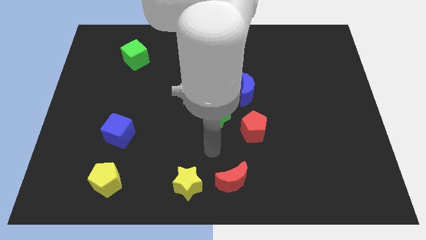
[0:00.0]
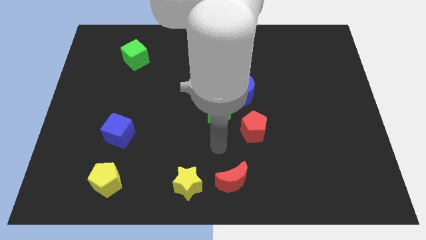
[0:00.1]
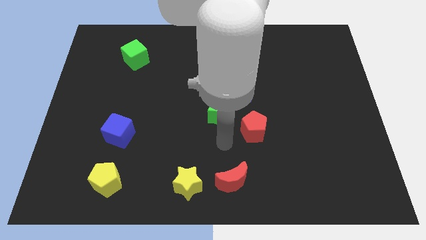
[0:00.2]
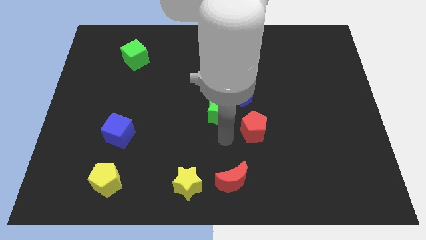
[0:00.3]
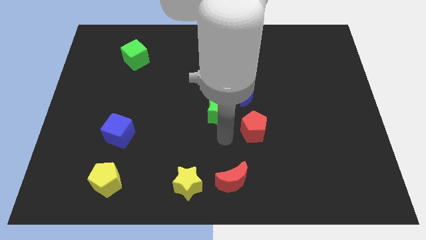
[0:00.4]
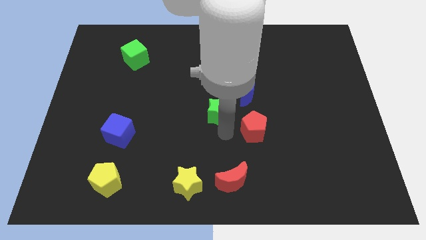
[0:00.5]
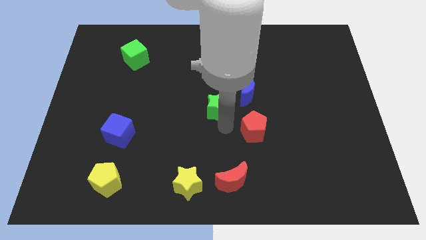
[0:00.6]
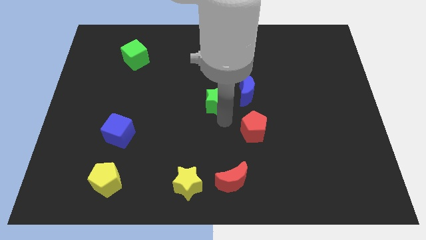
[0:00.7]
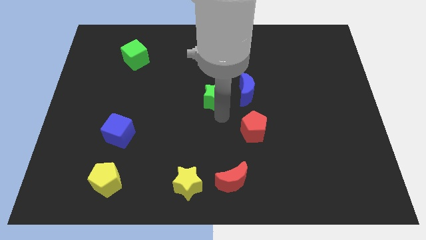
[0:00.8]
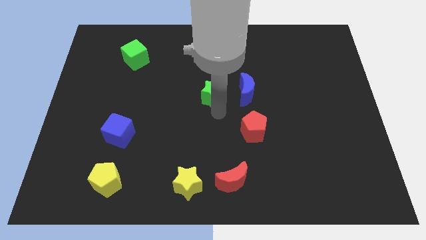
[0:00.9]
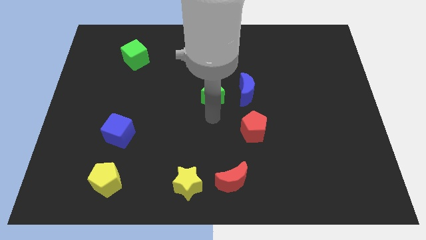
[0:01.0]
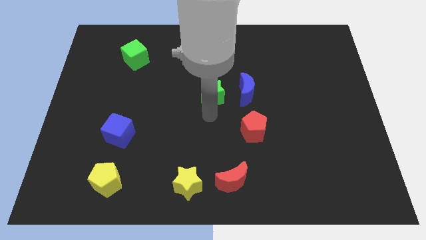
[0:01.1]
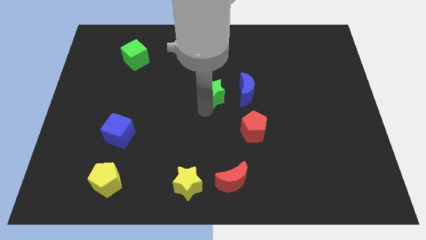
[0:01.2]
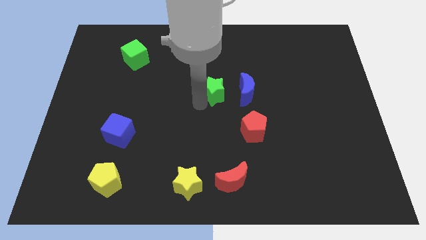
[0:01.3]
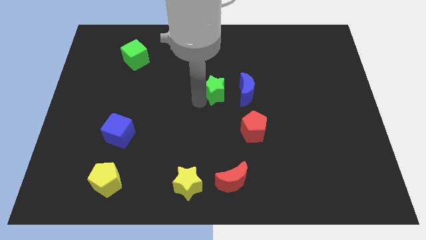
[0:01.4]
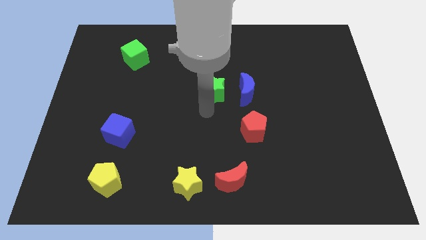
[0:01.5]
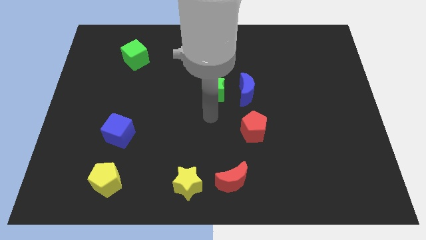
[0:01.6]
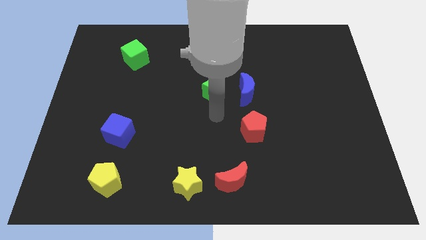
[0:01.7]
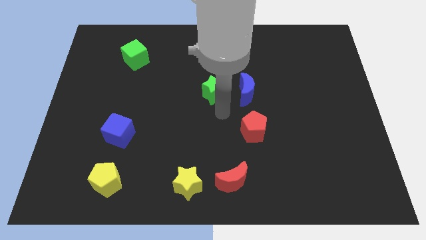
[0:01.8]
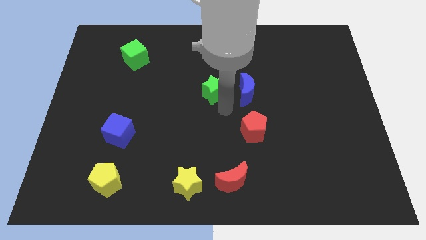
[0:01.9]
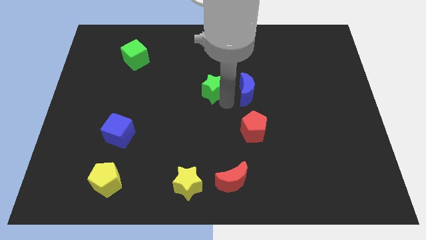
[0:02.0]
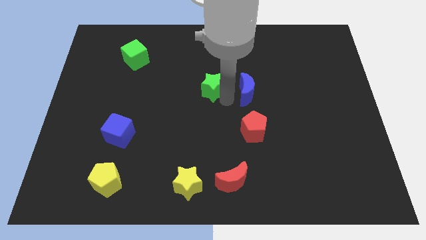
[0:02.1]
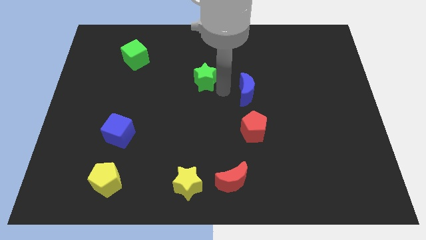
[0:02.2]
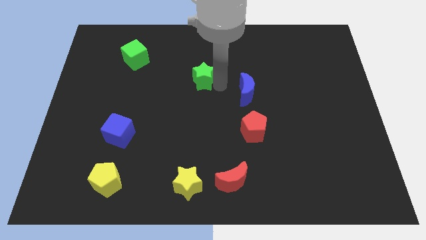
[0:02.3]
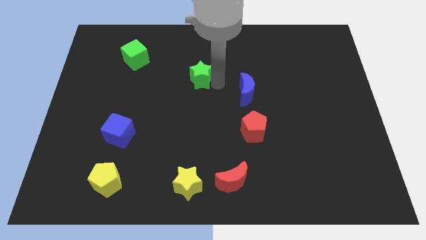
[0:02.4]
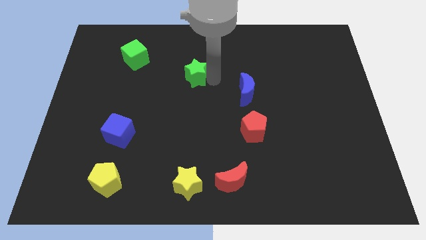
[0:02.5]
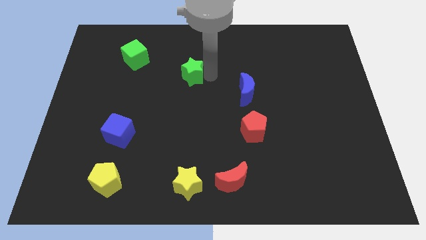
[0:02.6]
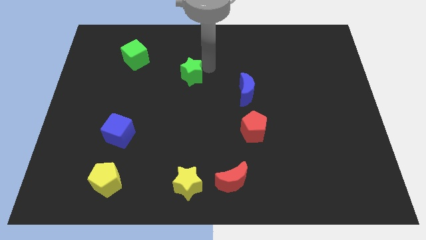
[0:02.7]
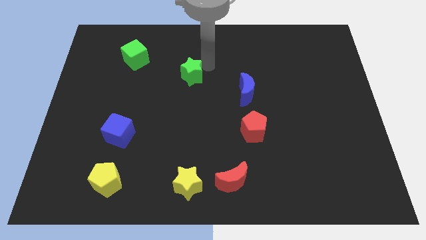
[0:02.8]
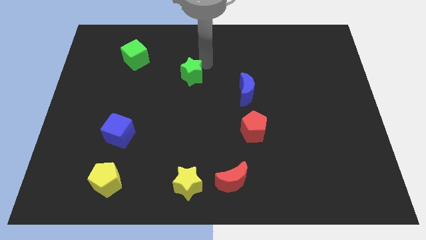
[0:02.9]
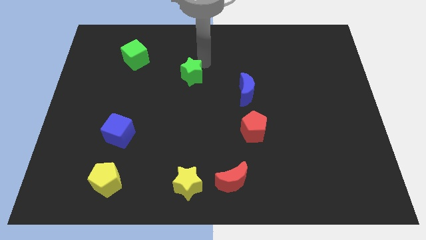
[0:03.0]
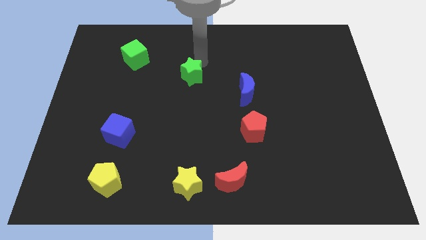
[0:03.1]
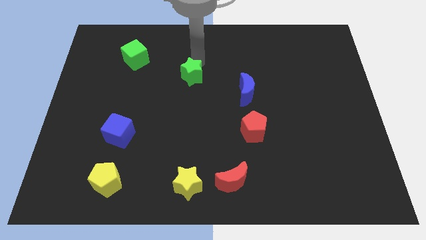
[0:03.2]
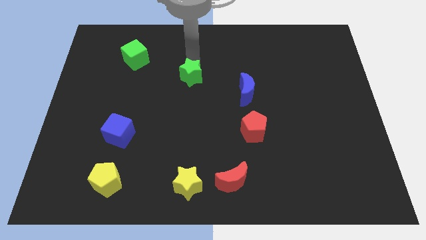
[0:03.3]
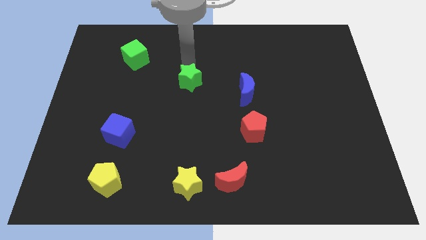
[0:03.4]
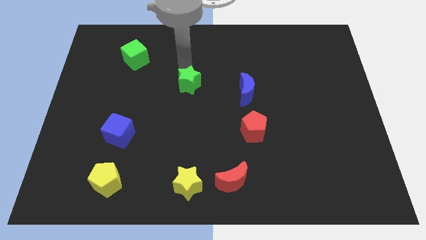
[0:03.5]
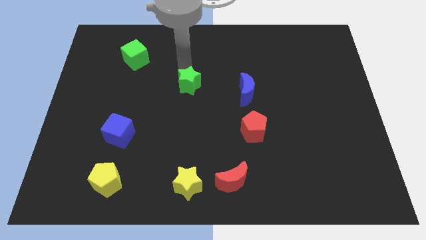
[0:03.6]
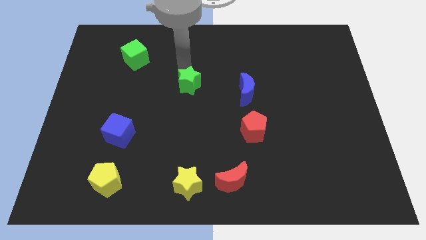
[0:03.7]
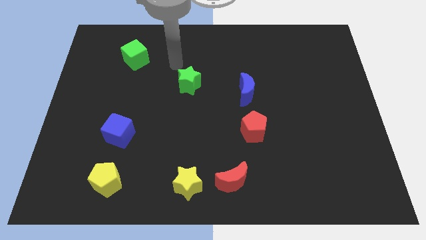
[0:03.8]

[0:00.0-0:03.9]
move away green star from blue moon

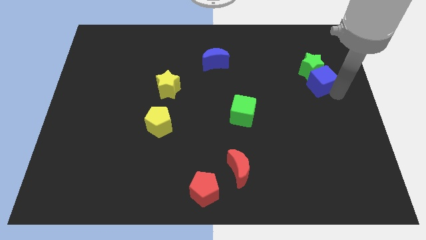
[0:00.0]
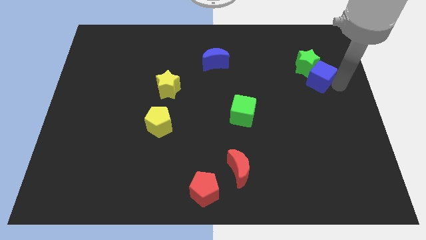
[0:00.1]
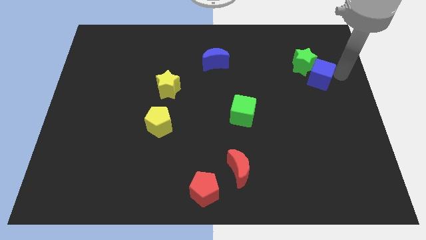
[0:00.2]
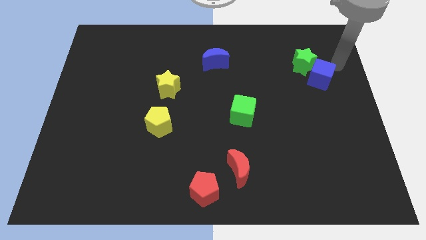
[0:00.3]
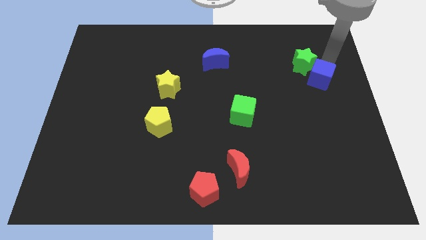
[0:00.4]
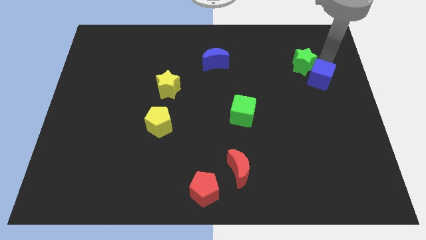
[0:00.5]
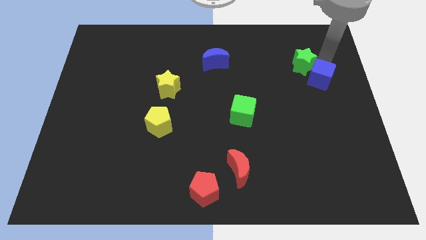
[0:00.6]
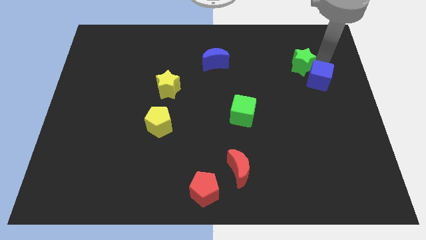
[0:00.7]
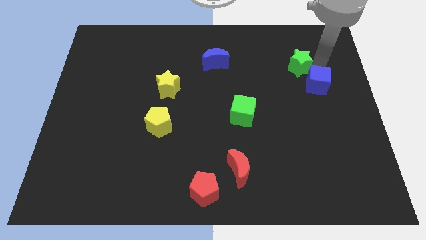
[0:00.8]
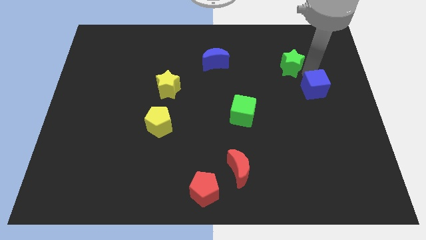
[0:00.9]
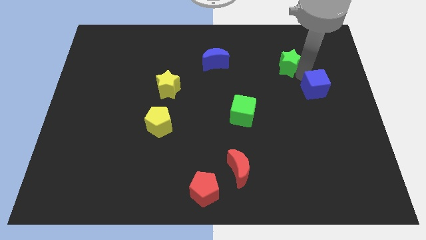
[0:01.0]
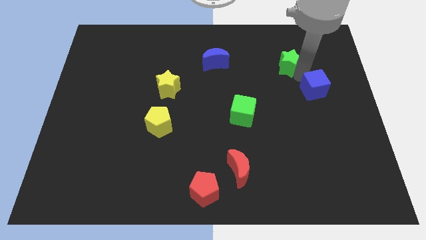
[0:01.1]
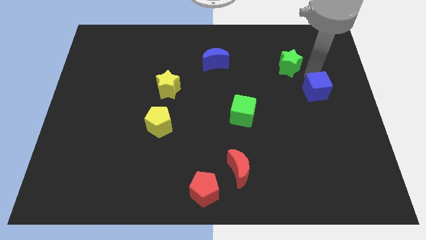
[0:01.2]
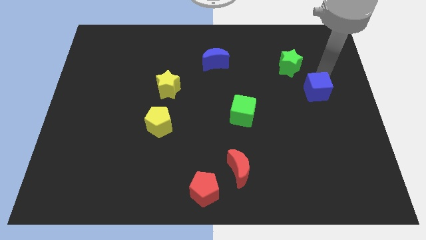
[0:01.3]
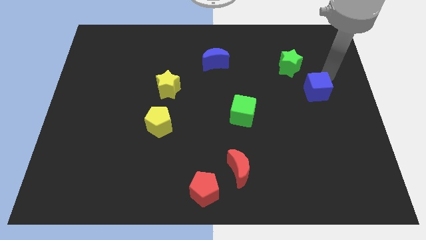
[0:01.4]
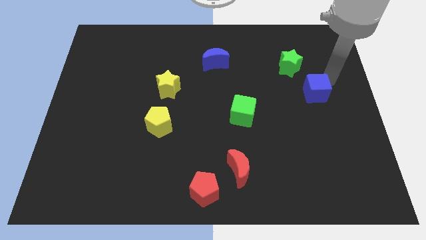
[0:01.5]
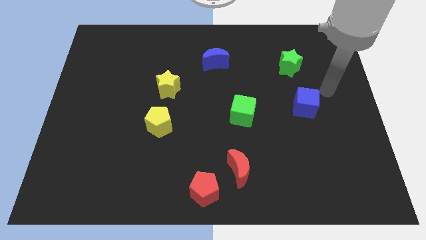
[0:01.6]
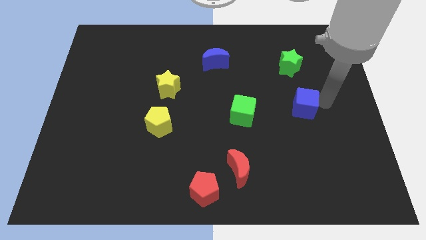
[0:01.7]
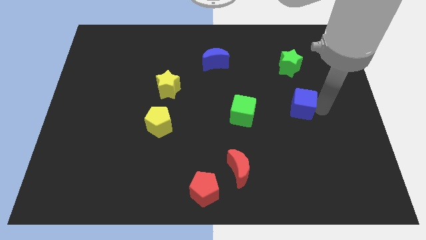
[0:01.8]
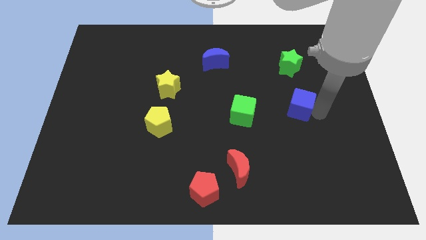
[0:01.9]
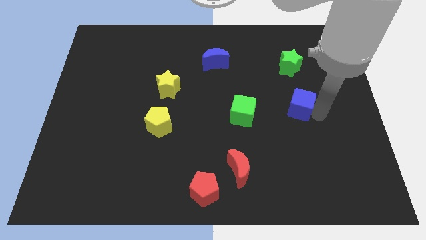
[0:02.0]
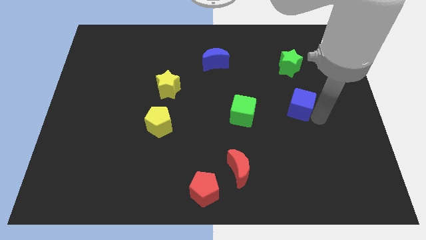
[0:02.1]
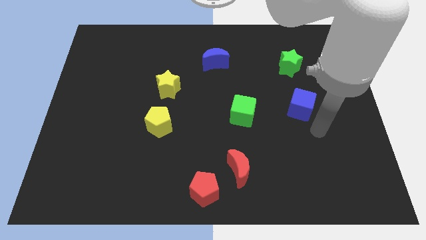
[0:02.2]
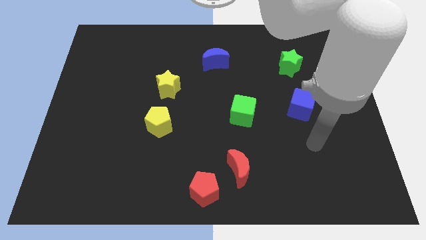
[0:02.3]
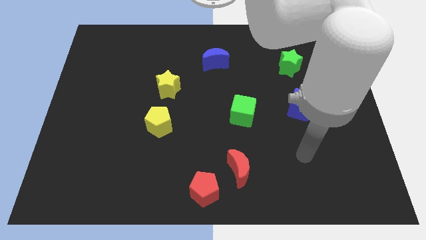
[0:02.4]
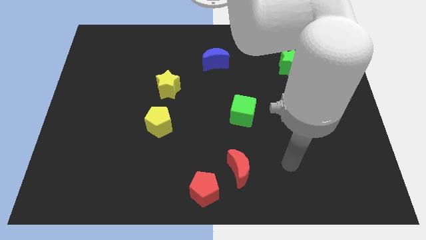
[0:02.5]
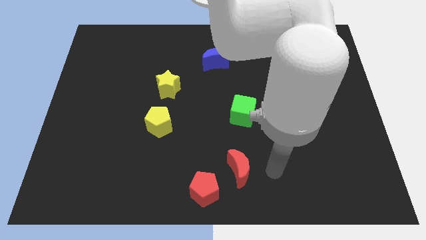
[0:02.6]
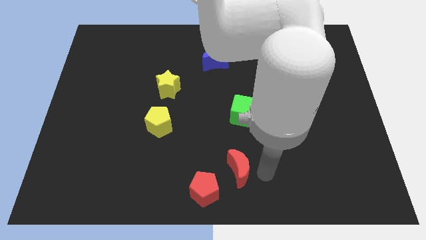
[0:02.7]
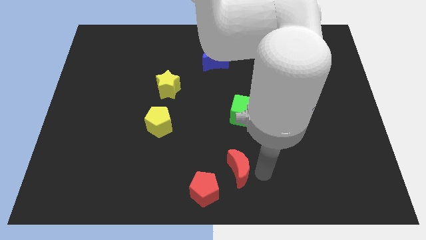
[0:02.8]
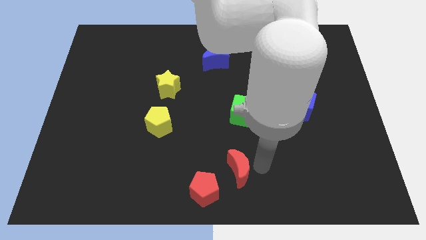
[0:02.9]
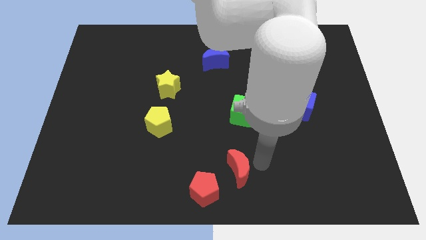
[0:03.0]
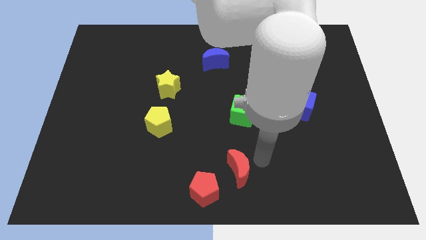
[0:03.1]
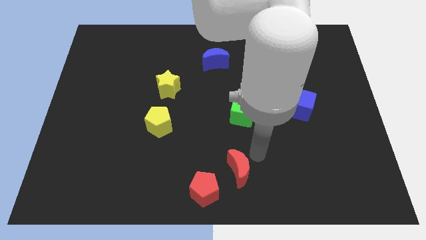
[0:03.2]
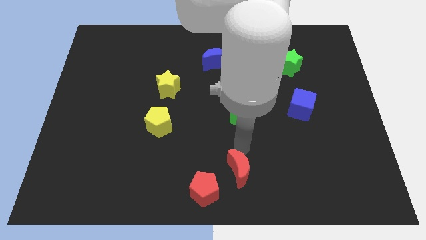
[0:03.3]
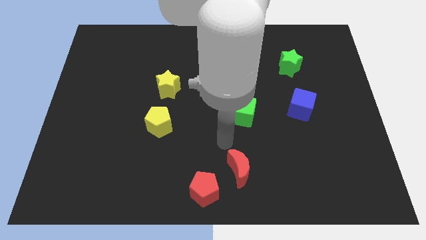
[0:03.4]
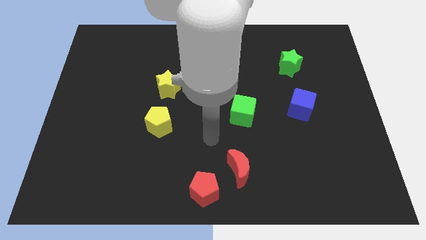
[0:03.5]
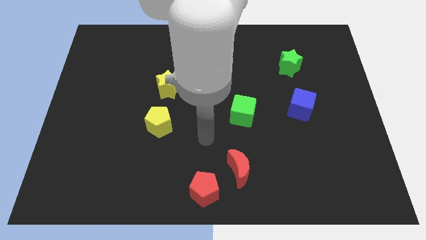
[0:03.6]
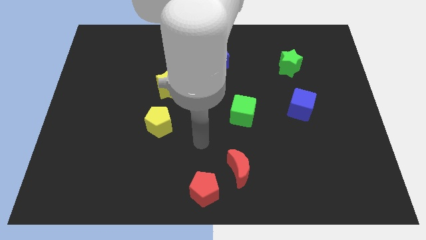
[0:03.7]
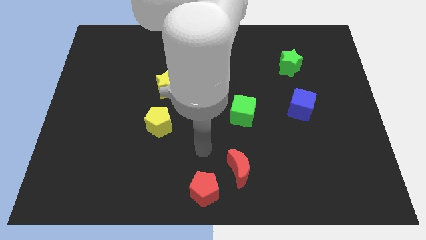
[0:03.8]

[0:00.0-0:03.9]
separate green star and blue cube

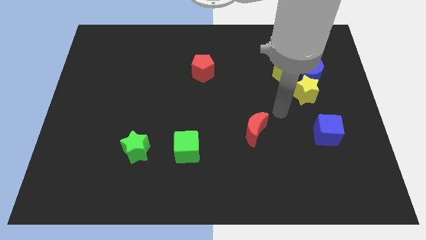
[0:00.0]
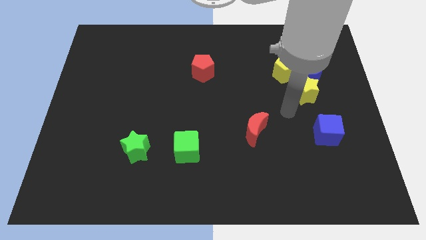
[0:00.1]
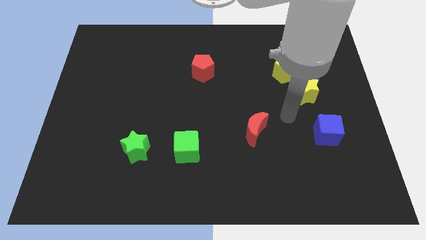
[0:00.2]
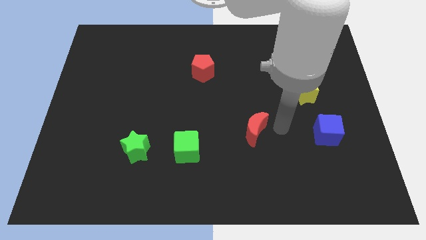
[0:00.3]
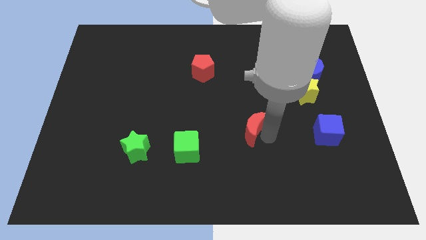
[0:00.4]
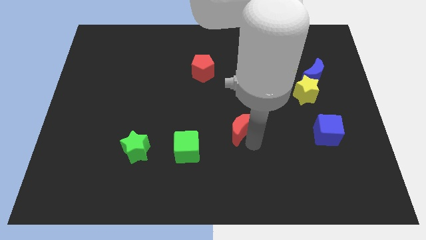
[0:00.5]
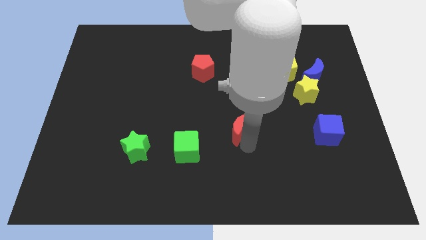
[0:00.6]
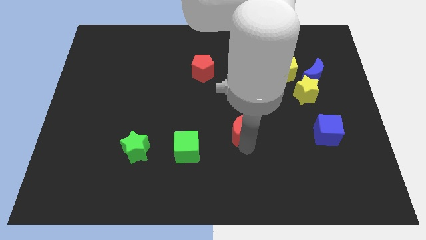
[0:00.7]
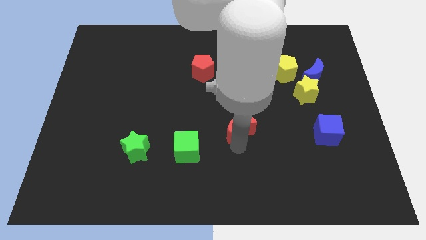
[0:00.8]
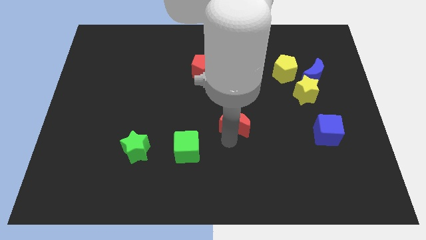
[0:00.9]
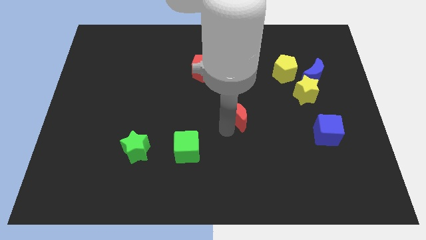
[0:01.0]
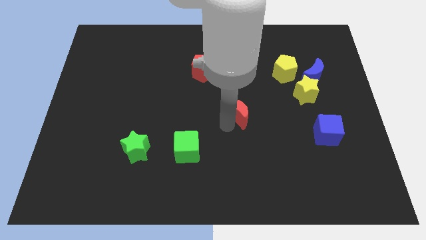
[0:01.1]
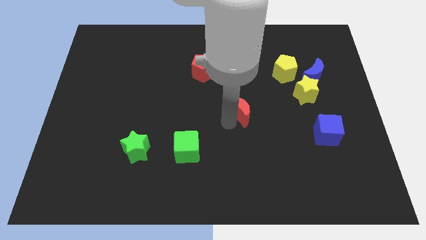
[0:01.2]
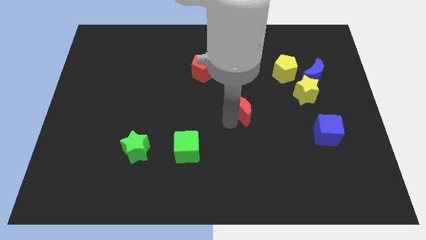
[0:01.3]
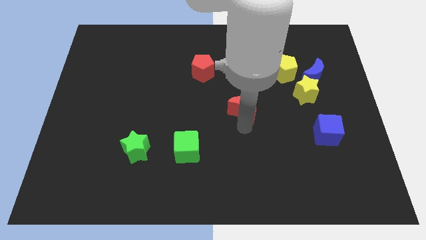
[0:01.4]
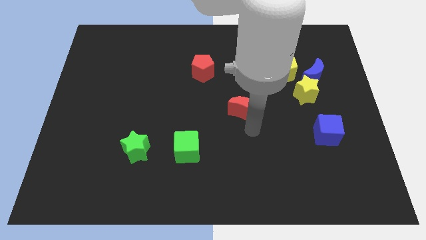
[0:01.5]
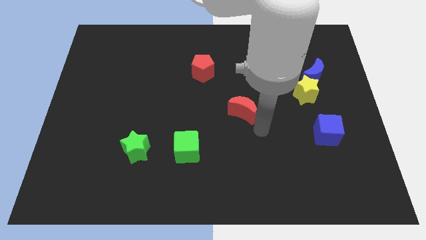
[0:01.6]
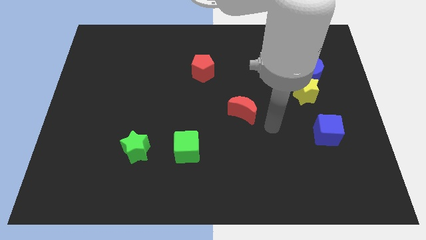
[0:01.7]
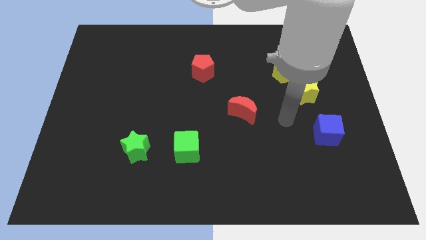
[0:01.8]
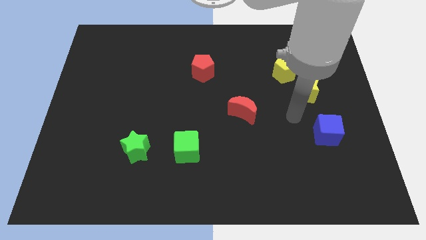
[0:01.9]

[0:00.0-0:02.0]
push the red crescent diagonally on the top right side of the green cube
